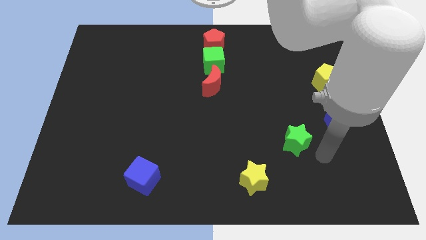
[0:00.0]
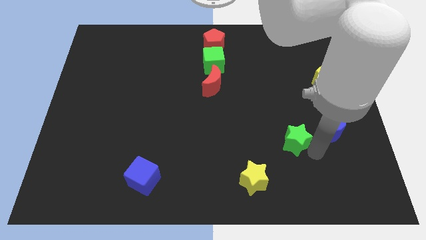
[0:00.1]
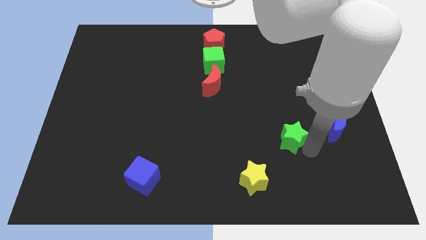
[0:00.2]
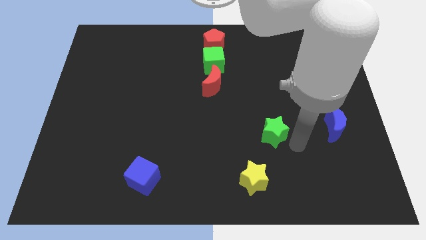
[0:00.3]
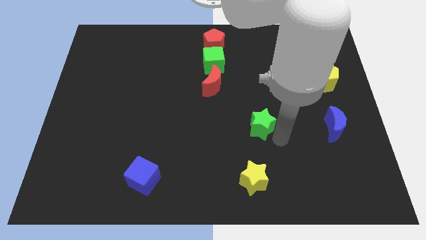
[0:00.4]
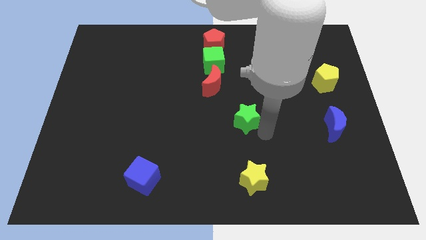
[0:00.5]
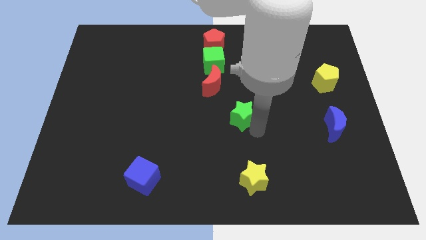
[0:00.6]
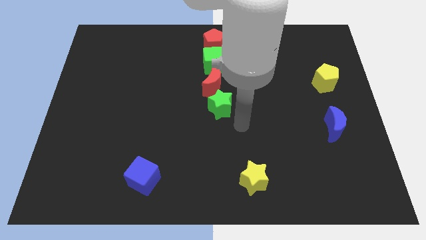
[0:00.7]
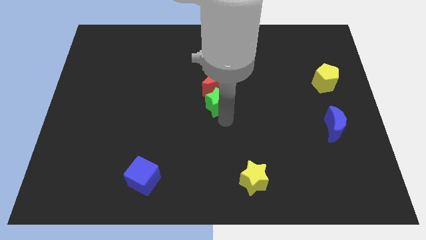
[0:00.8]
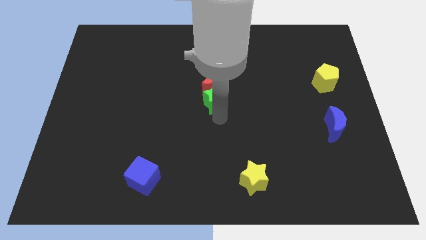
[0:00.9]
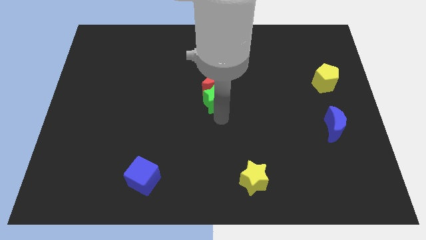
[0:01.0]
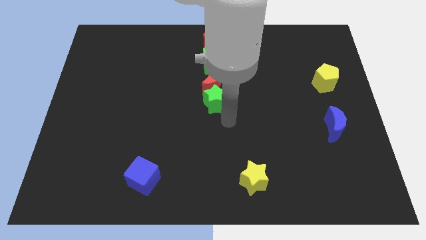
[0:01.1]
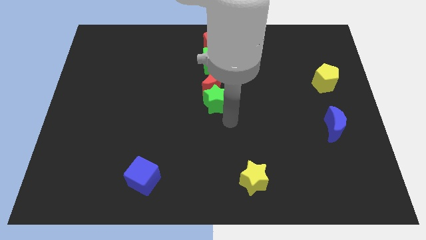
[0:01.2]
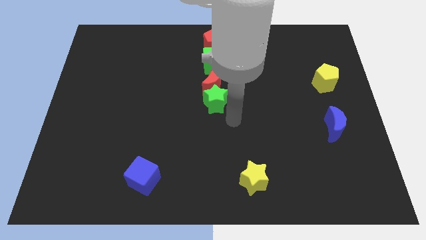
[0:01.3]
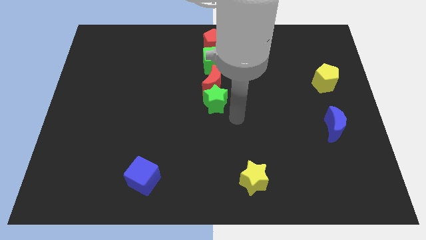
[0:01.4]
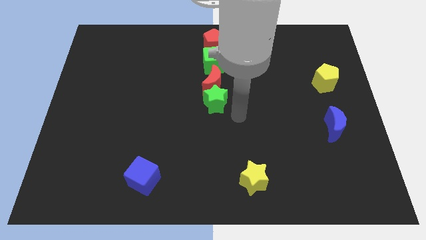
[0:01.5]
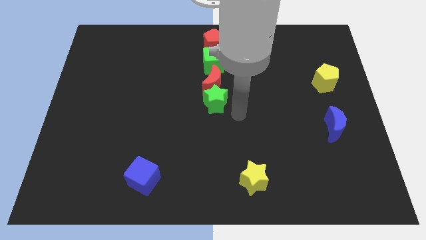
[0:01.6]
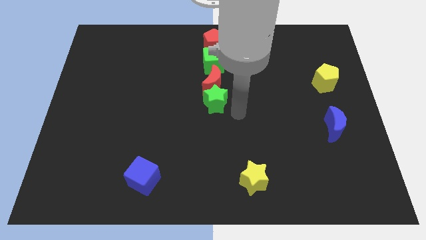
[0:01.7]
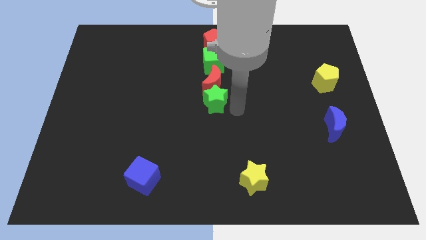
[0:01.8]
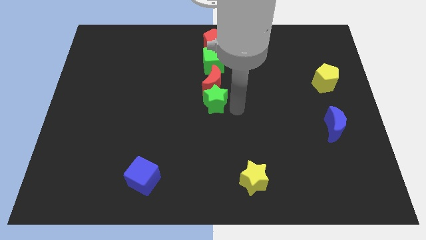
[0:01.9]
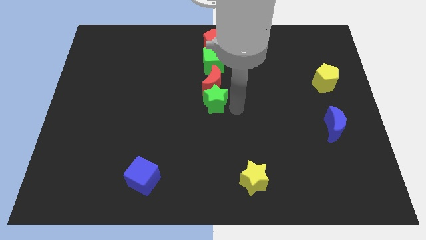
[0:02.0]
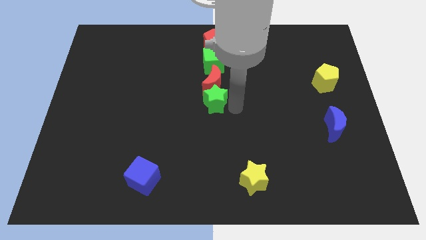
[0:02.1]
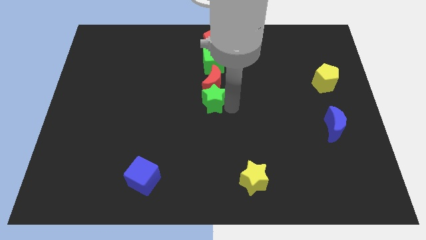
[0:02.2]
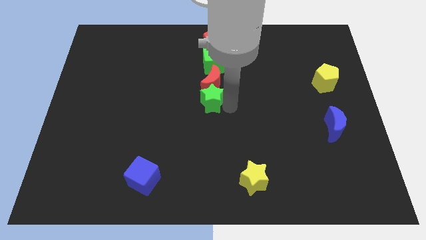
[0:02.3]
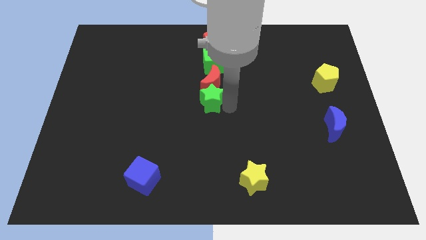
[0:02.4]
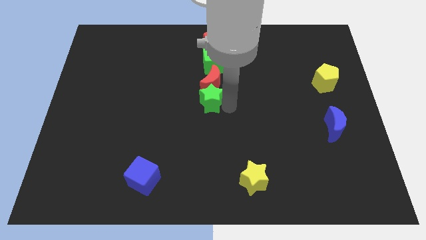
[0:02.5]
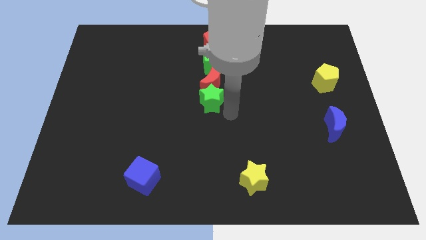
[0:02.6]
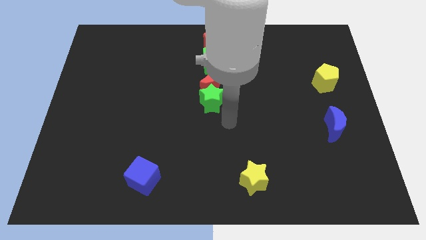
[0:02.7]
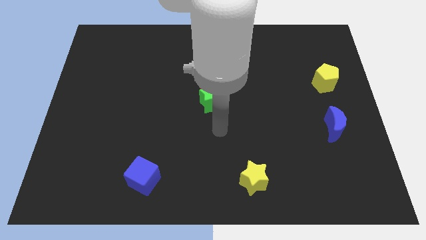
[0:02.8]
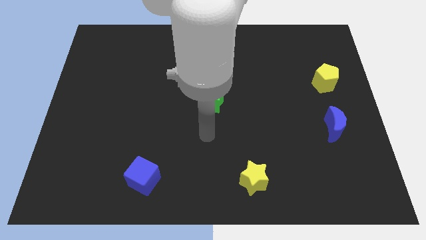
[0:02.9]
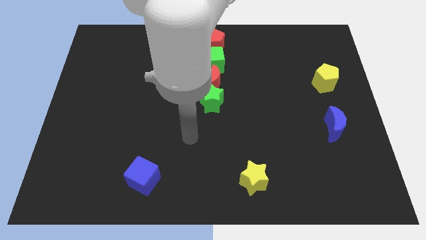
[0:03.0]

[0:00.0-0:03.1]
push the green star to the bottom of the red crescent

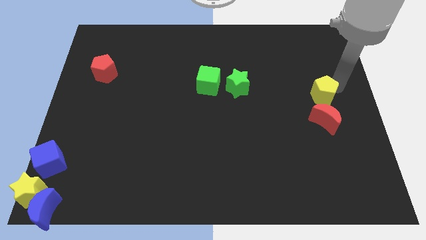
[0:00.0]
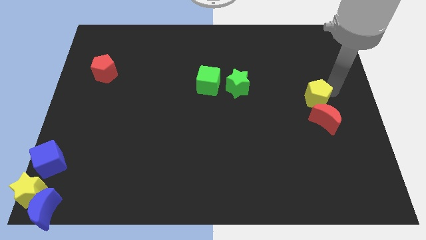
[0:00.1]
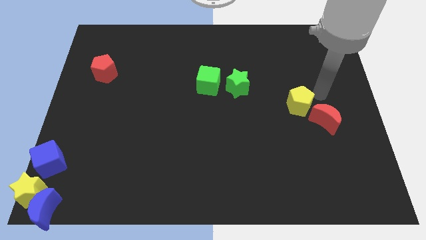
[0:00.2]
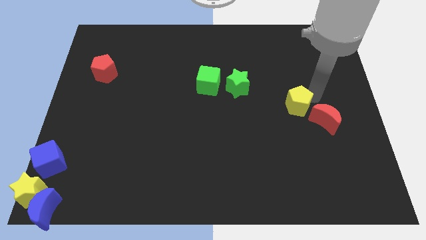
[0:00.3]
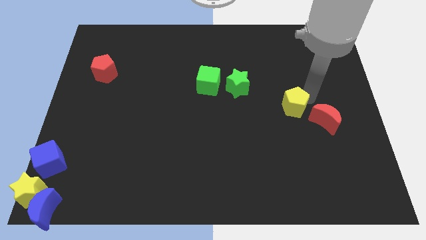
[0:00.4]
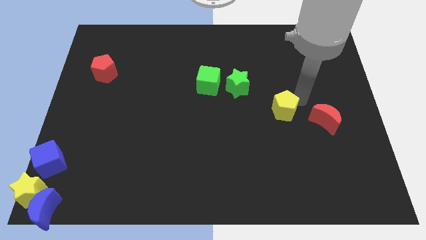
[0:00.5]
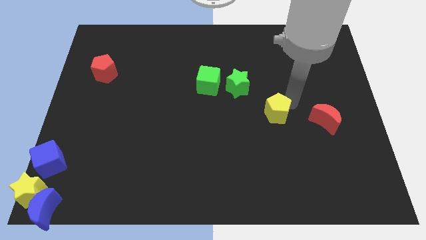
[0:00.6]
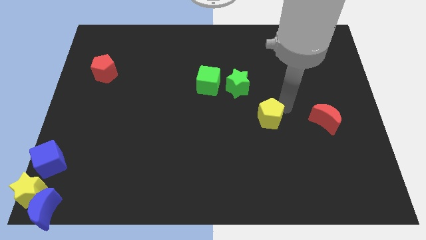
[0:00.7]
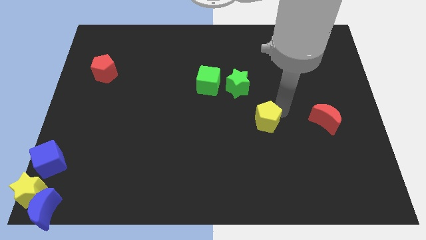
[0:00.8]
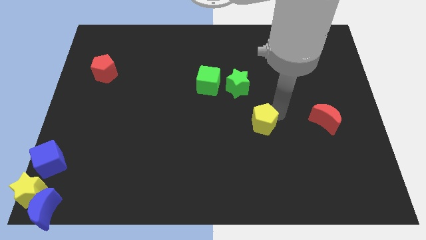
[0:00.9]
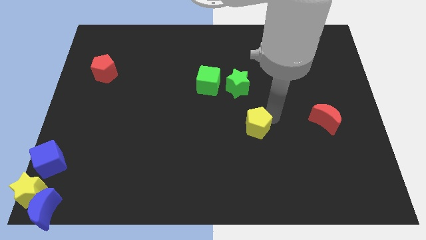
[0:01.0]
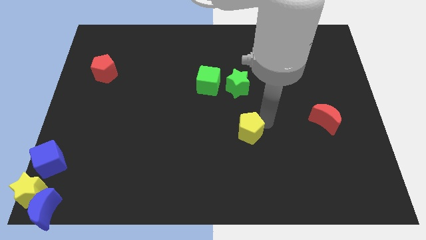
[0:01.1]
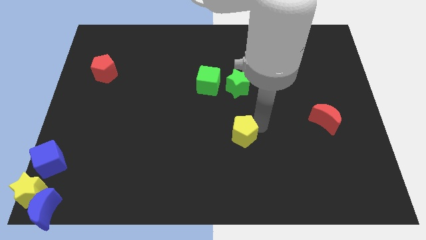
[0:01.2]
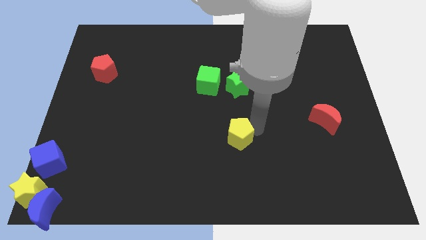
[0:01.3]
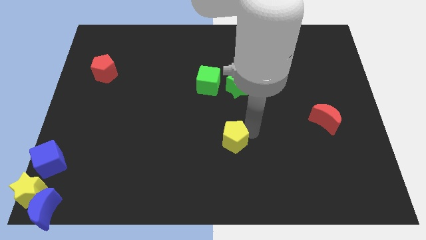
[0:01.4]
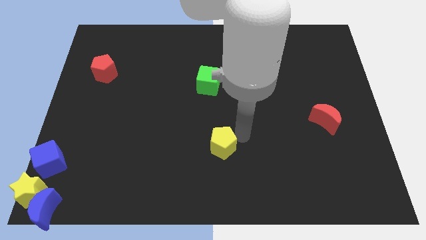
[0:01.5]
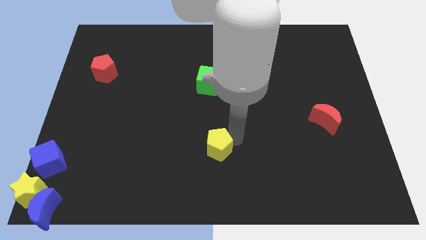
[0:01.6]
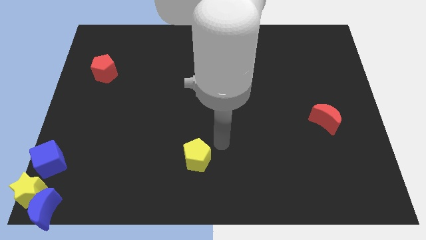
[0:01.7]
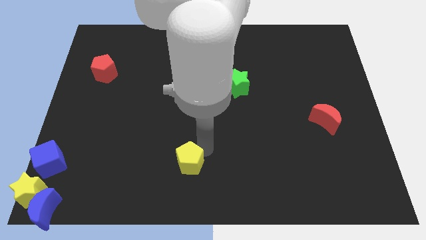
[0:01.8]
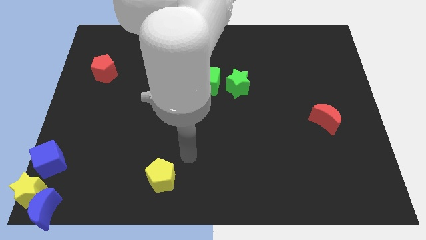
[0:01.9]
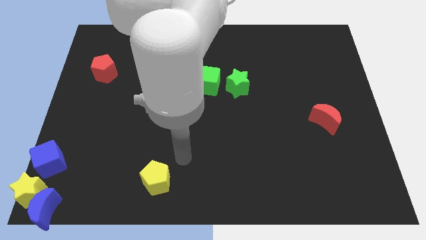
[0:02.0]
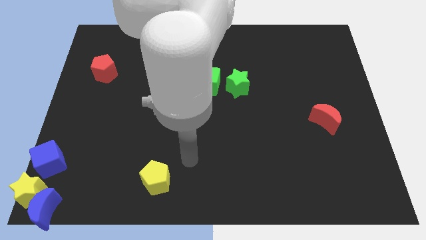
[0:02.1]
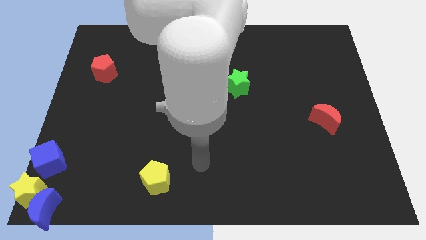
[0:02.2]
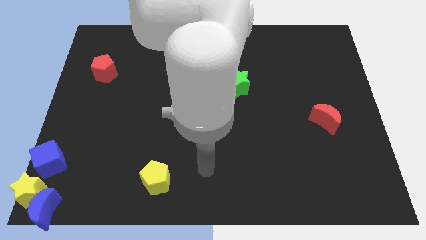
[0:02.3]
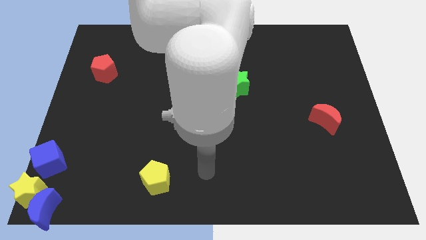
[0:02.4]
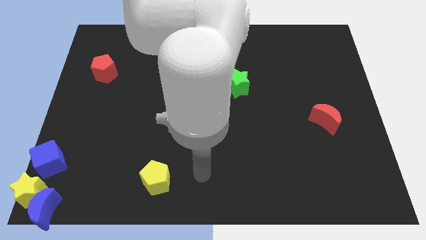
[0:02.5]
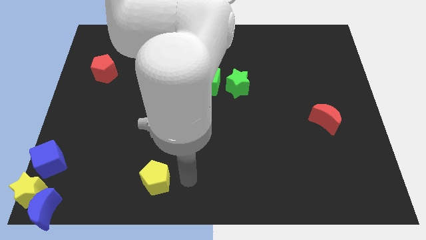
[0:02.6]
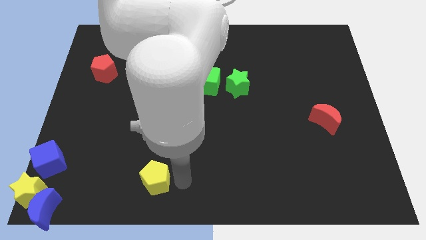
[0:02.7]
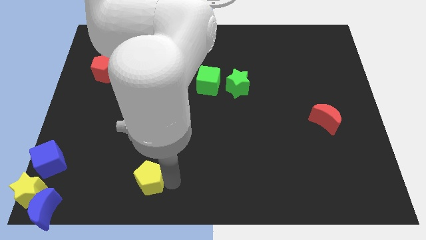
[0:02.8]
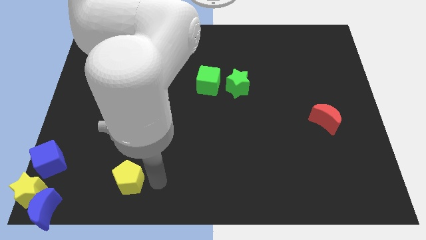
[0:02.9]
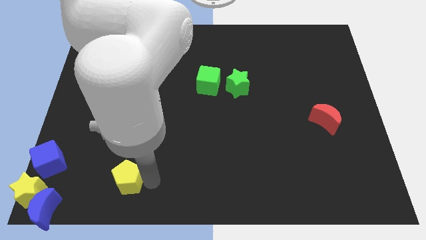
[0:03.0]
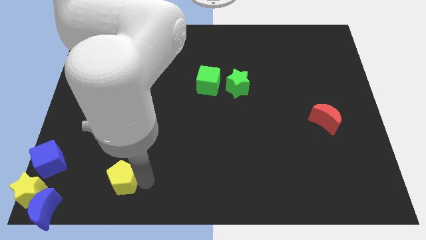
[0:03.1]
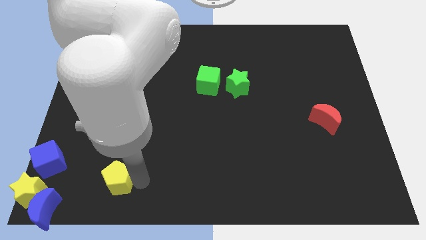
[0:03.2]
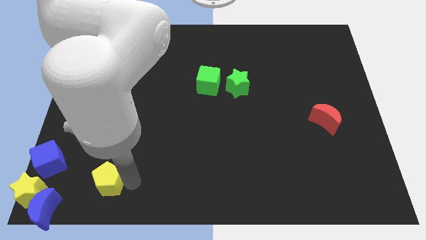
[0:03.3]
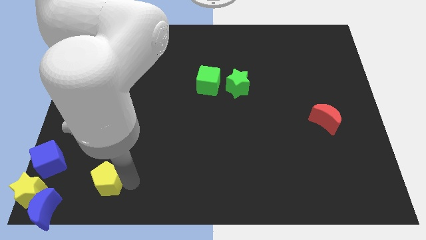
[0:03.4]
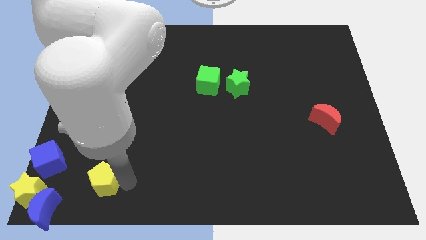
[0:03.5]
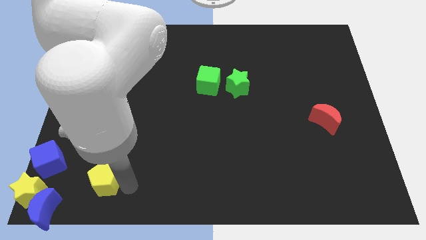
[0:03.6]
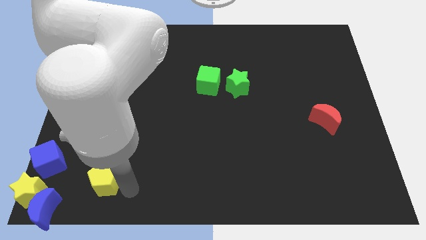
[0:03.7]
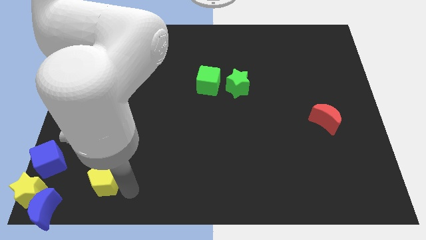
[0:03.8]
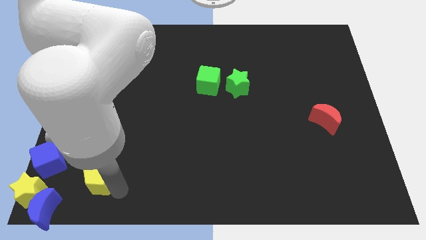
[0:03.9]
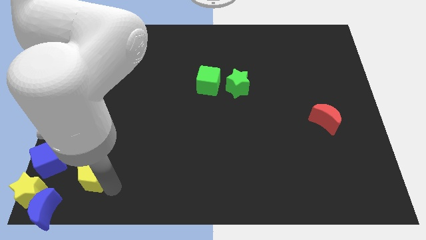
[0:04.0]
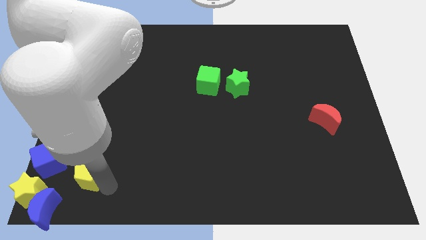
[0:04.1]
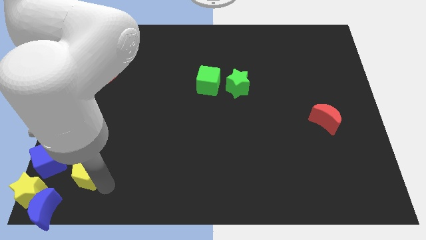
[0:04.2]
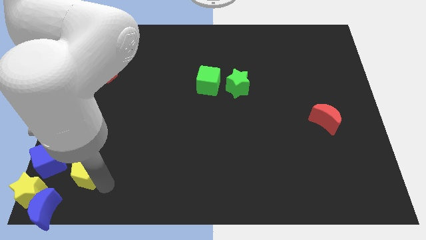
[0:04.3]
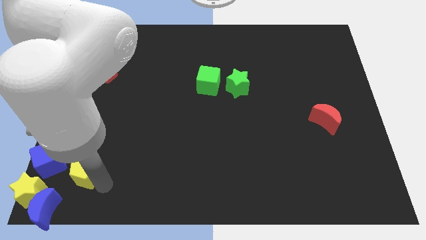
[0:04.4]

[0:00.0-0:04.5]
push the yellow pentagon to the right of the blue cube

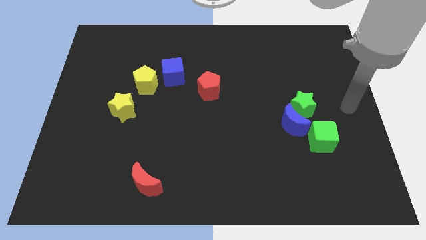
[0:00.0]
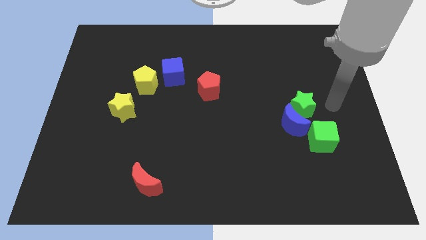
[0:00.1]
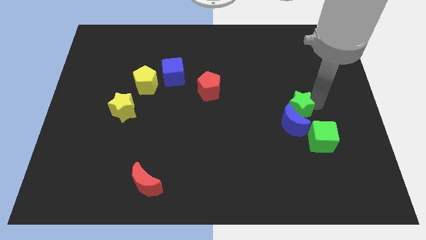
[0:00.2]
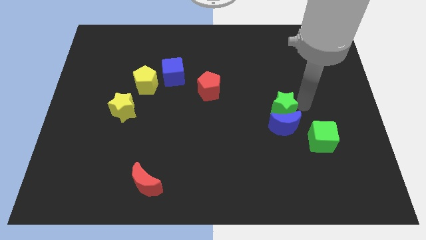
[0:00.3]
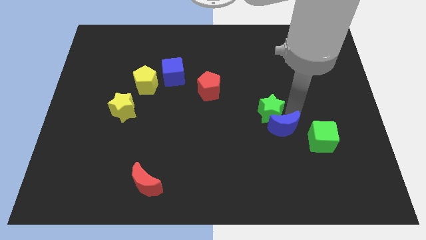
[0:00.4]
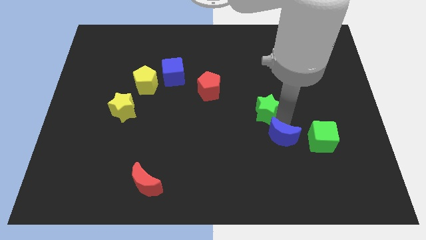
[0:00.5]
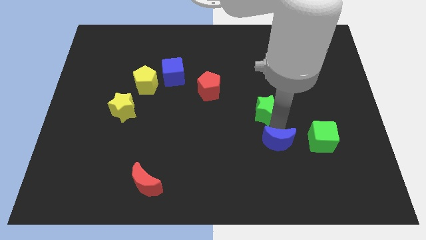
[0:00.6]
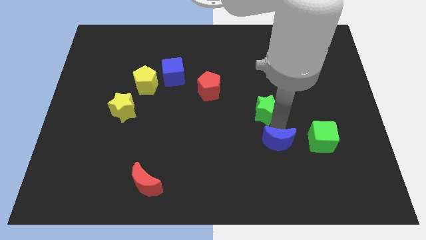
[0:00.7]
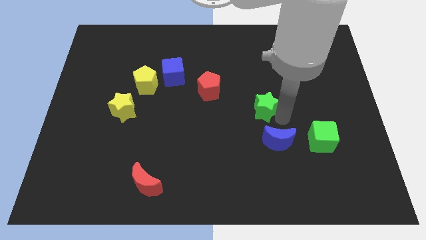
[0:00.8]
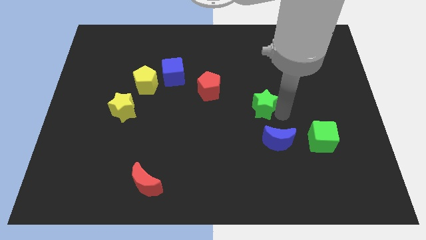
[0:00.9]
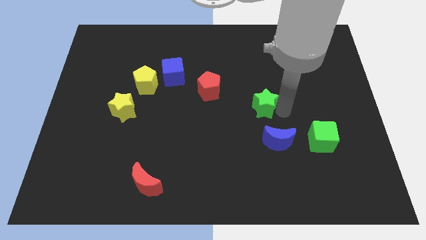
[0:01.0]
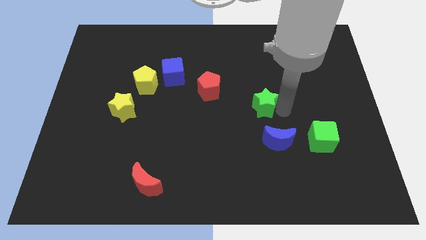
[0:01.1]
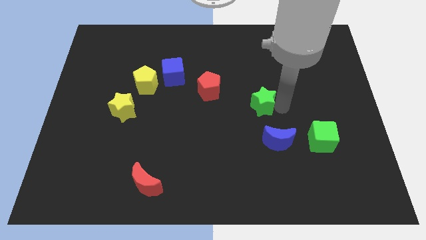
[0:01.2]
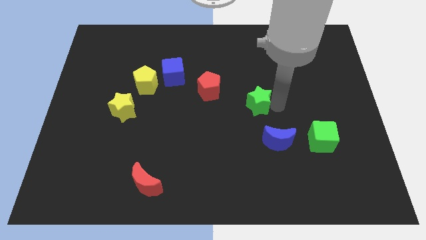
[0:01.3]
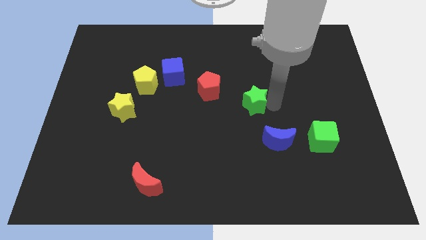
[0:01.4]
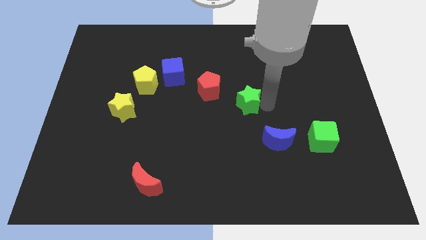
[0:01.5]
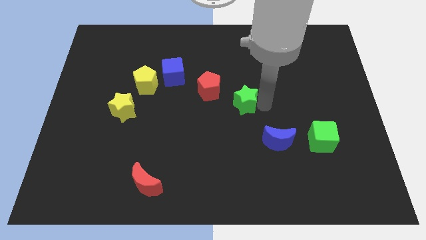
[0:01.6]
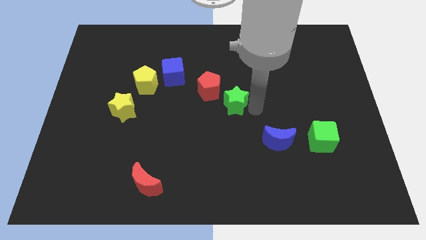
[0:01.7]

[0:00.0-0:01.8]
separate the green star and blue moon
